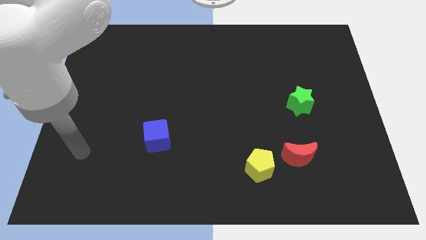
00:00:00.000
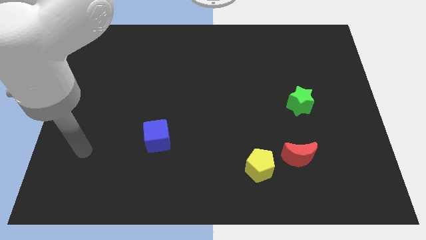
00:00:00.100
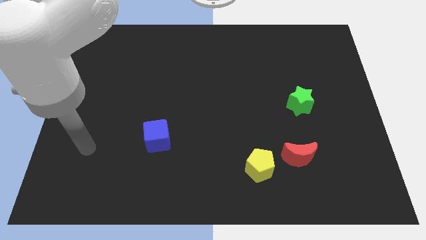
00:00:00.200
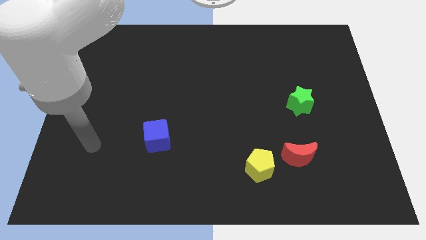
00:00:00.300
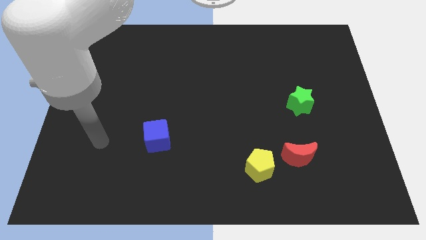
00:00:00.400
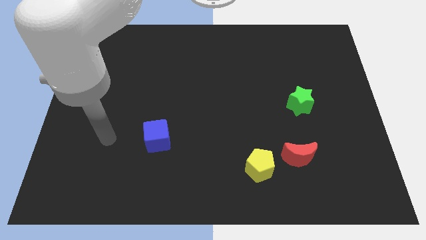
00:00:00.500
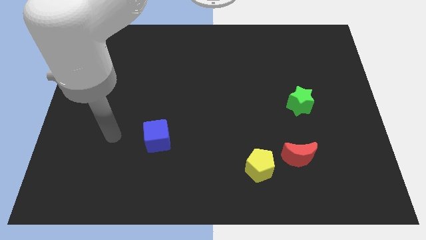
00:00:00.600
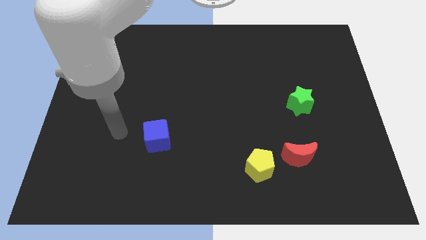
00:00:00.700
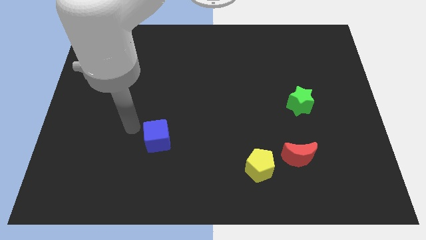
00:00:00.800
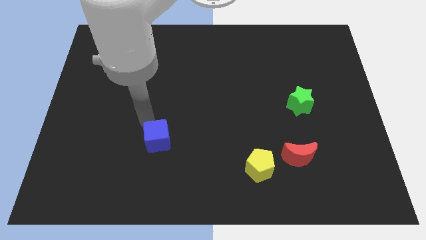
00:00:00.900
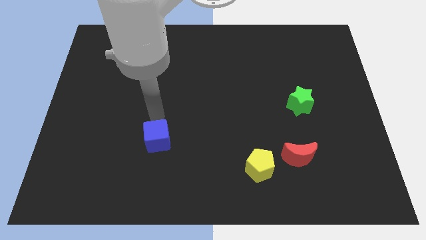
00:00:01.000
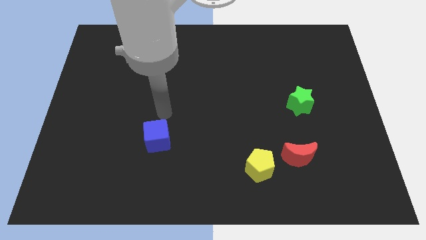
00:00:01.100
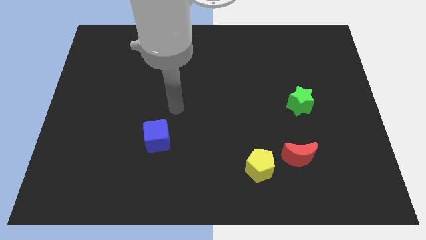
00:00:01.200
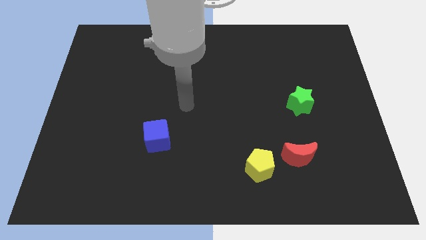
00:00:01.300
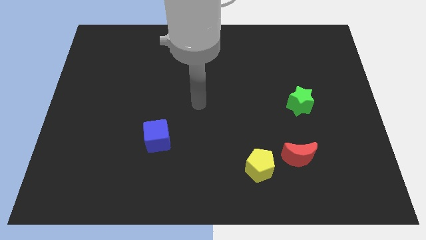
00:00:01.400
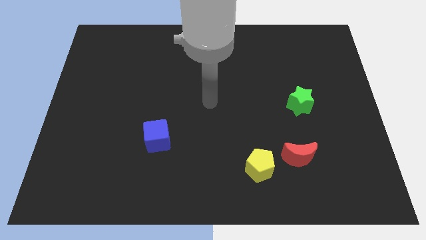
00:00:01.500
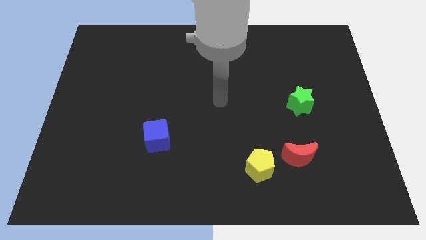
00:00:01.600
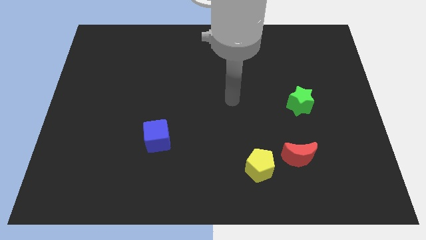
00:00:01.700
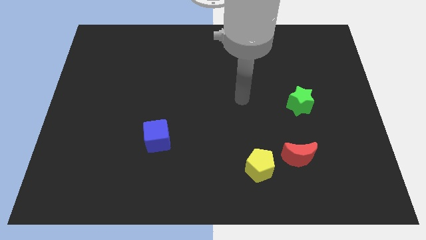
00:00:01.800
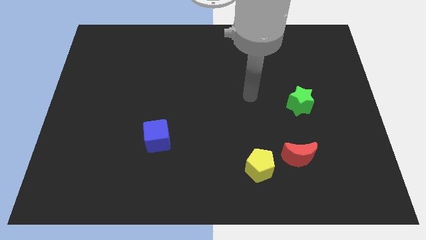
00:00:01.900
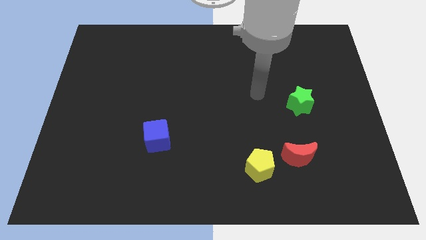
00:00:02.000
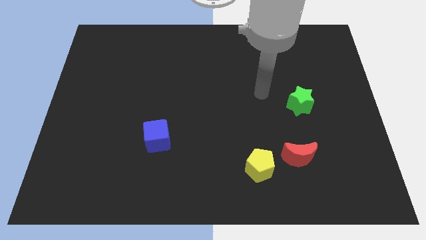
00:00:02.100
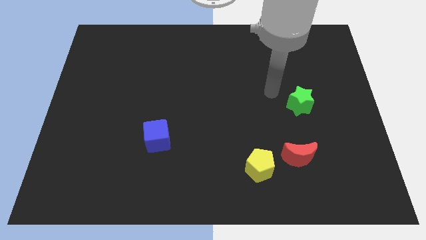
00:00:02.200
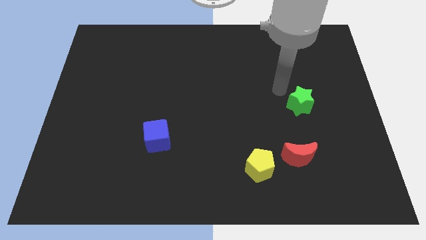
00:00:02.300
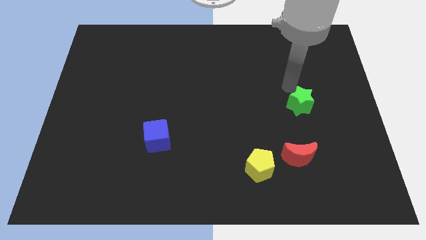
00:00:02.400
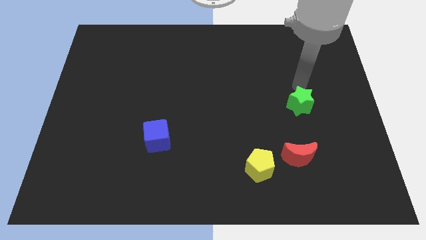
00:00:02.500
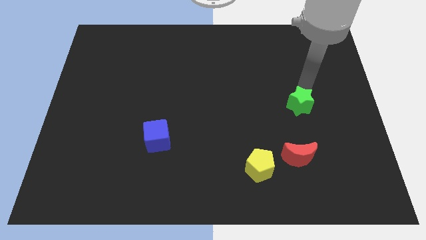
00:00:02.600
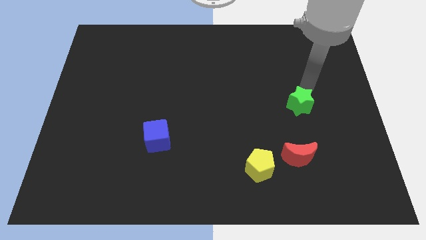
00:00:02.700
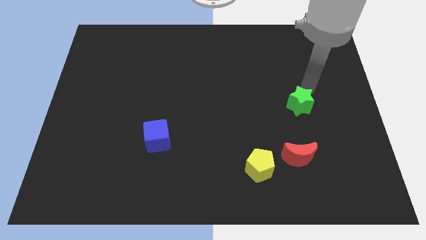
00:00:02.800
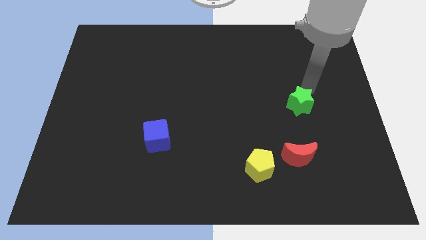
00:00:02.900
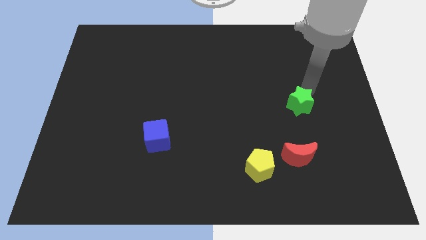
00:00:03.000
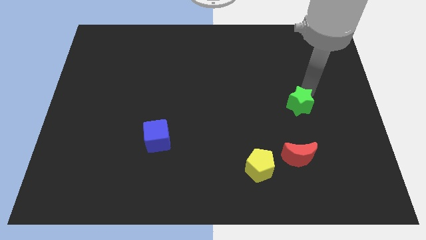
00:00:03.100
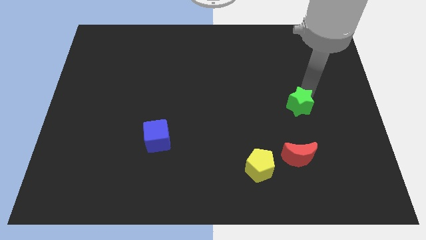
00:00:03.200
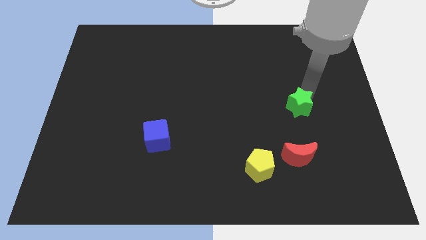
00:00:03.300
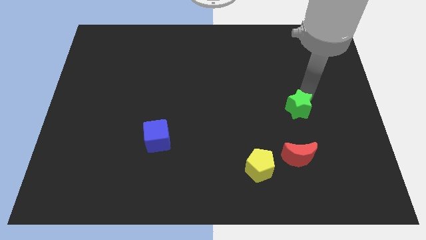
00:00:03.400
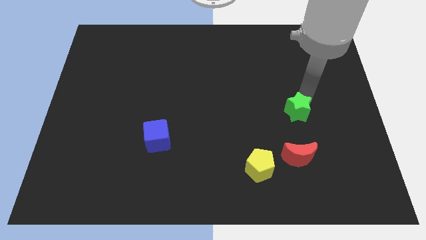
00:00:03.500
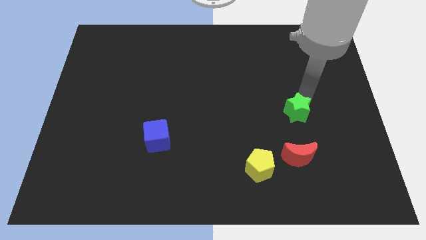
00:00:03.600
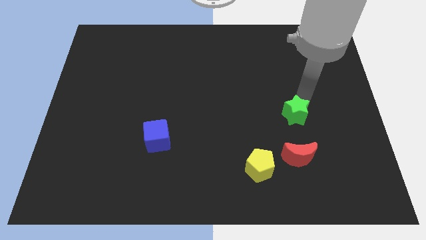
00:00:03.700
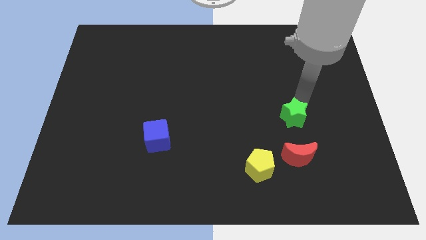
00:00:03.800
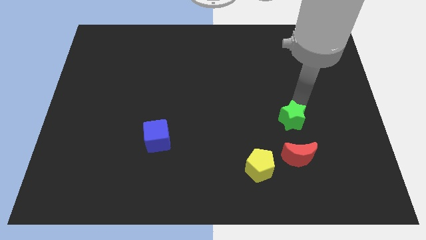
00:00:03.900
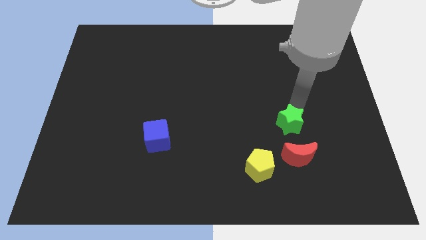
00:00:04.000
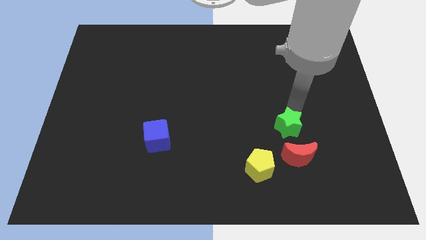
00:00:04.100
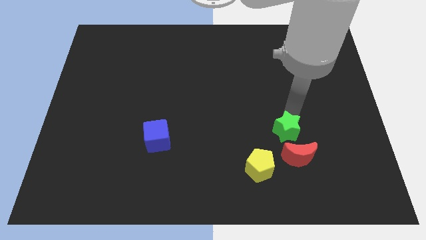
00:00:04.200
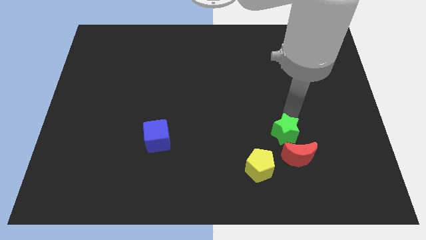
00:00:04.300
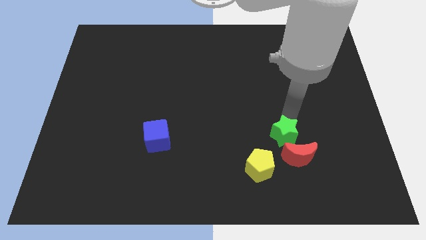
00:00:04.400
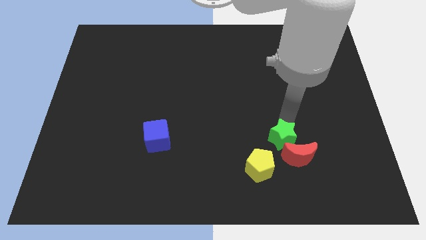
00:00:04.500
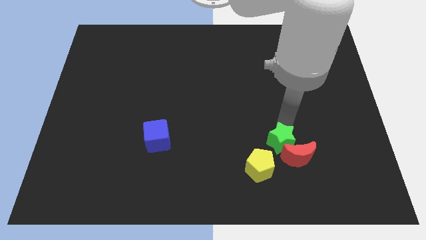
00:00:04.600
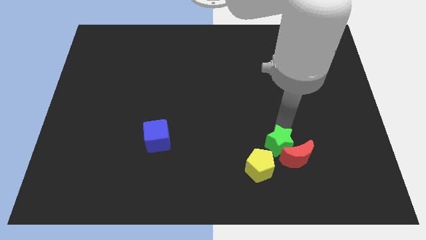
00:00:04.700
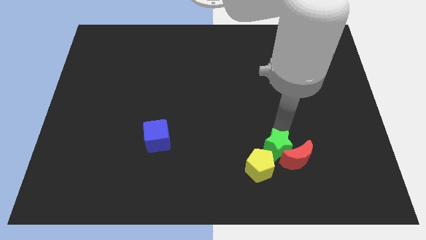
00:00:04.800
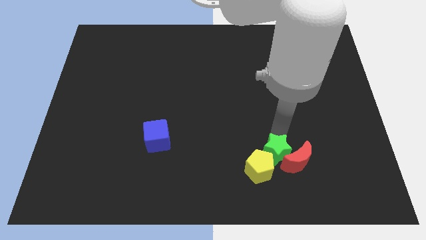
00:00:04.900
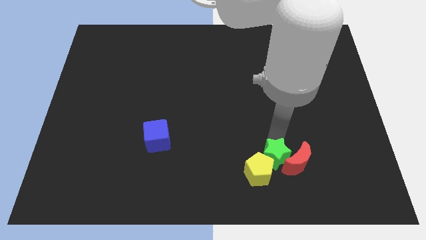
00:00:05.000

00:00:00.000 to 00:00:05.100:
move the green star towards the yellow pentagon

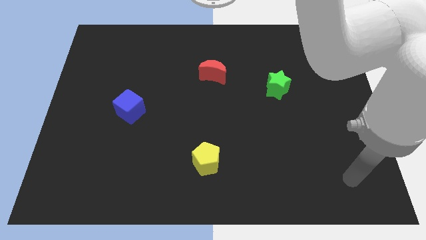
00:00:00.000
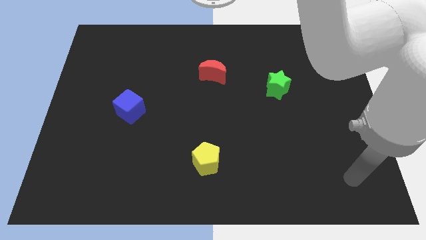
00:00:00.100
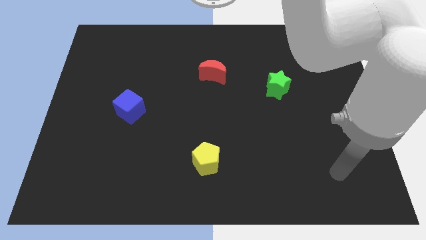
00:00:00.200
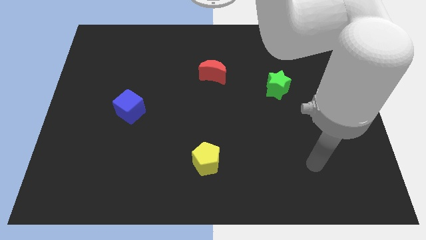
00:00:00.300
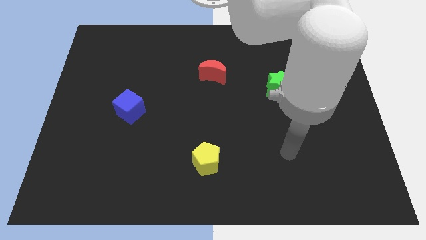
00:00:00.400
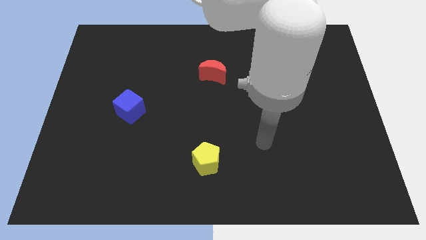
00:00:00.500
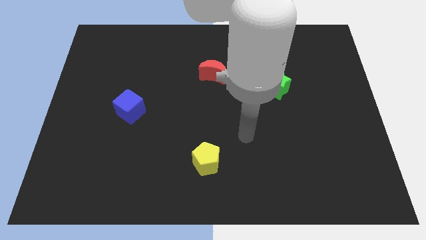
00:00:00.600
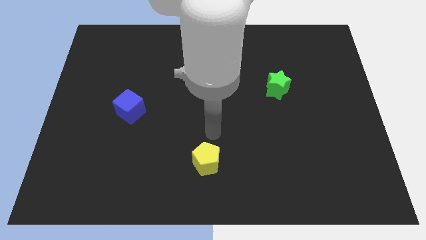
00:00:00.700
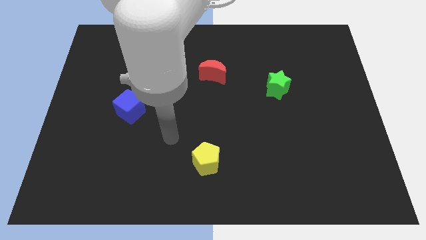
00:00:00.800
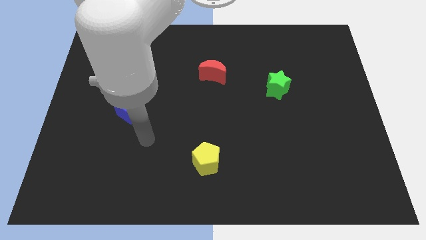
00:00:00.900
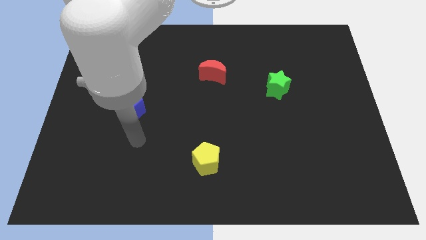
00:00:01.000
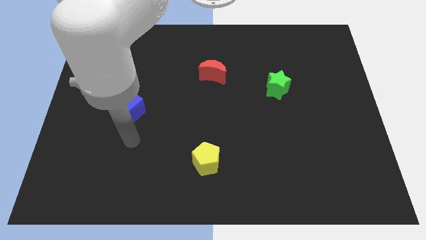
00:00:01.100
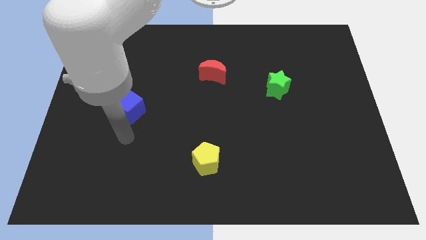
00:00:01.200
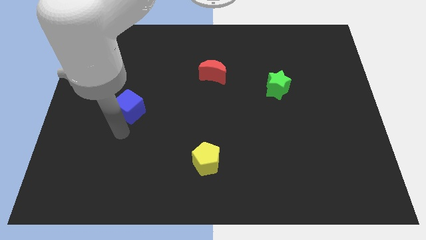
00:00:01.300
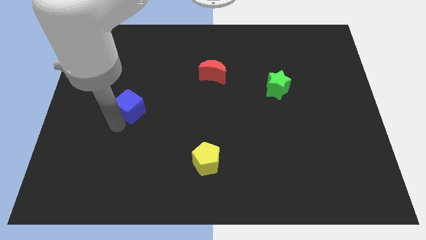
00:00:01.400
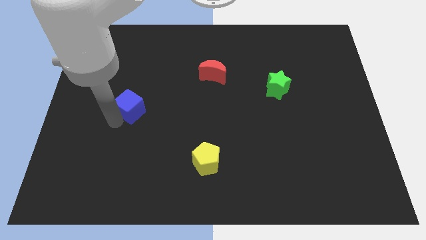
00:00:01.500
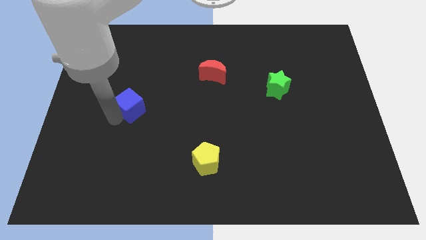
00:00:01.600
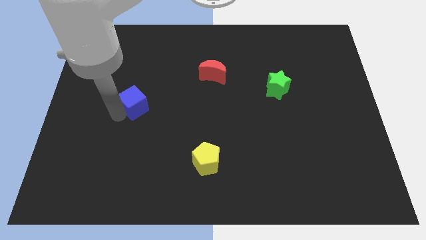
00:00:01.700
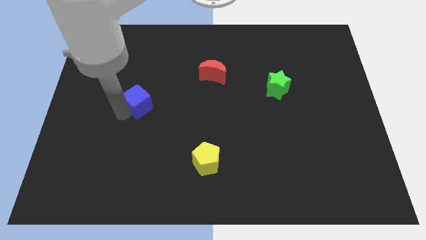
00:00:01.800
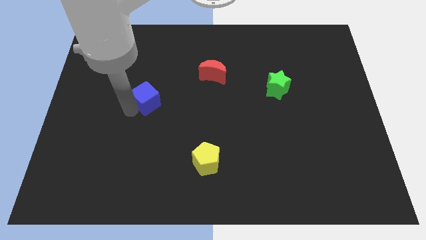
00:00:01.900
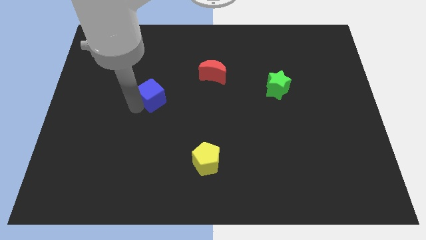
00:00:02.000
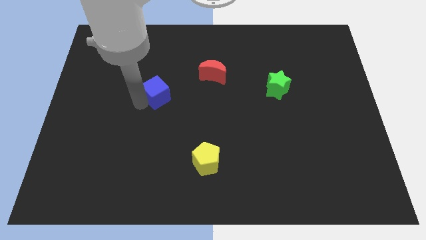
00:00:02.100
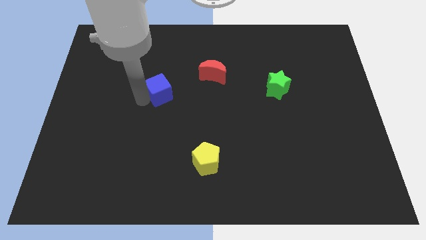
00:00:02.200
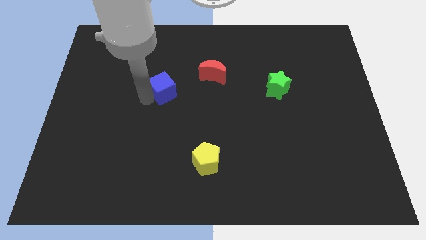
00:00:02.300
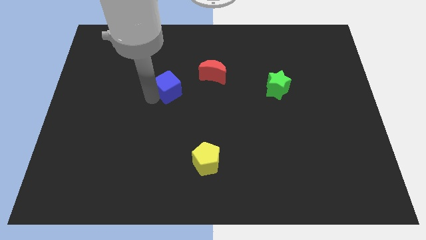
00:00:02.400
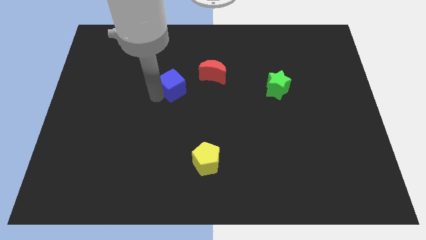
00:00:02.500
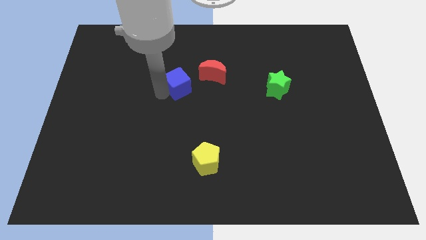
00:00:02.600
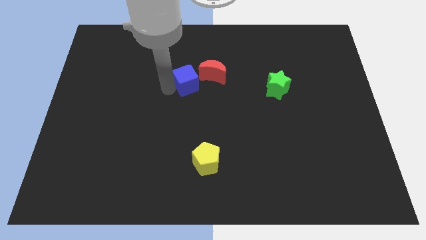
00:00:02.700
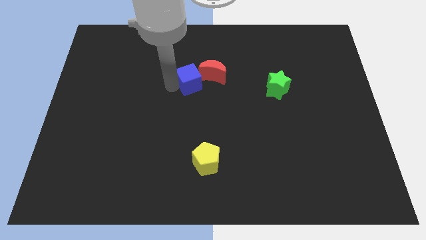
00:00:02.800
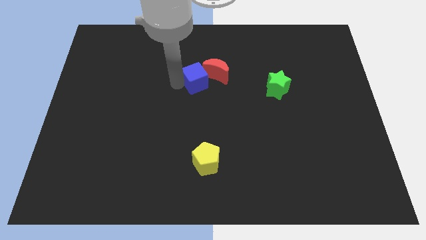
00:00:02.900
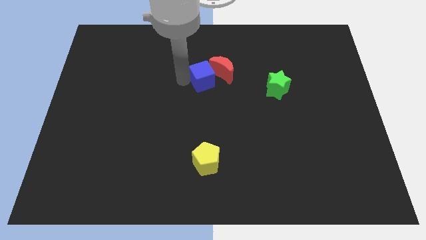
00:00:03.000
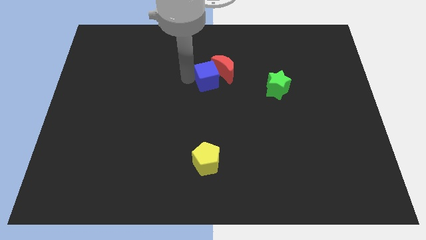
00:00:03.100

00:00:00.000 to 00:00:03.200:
move the blue cube close to the moon
